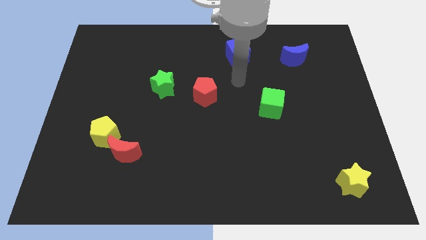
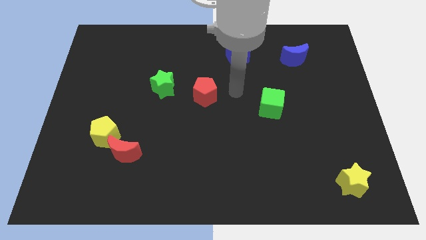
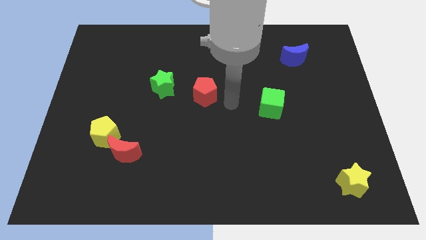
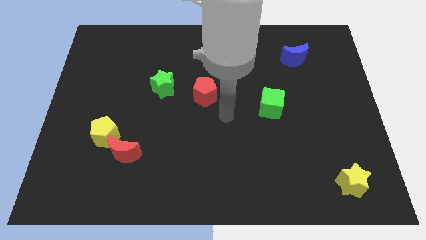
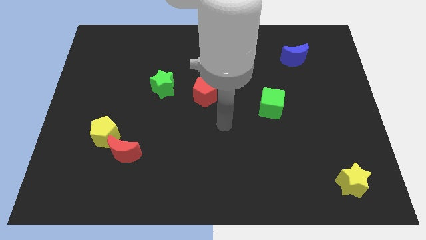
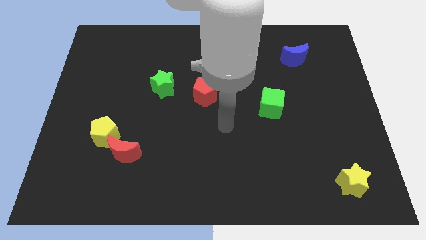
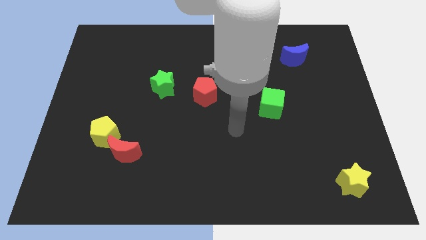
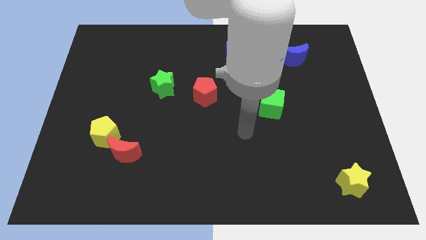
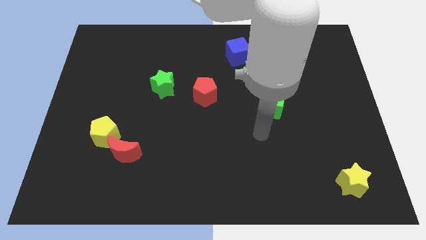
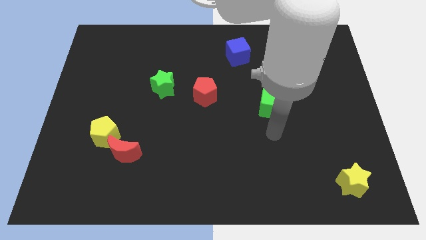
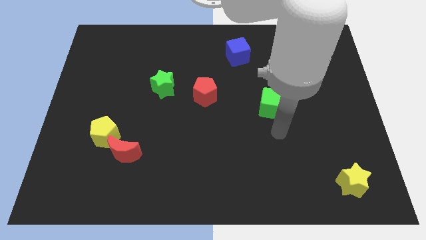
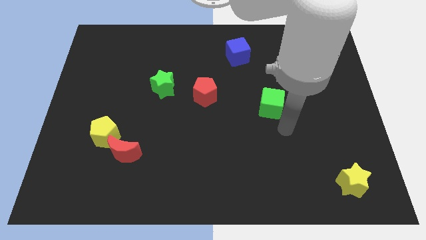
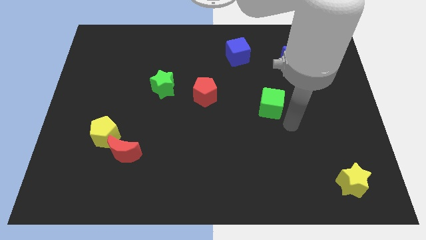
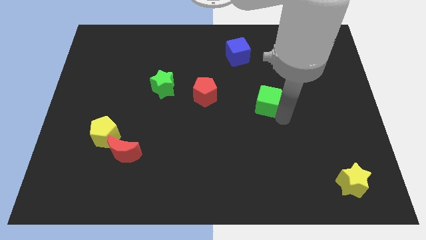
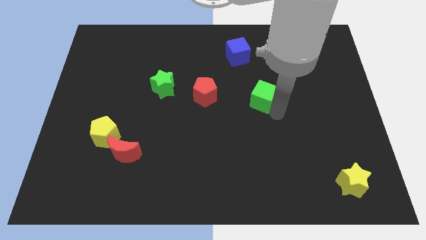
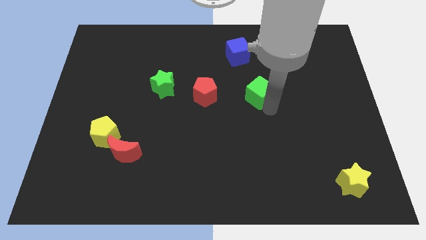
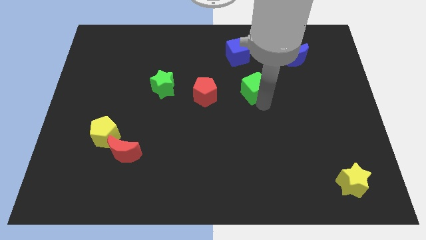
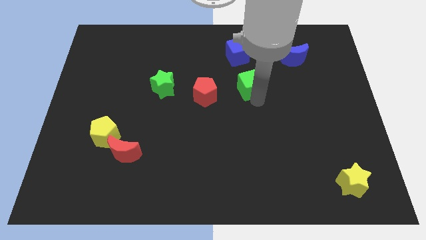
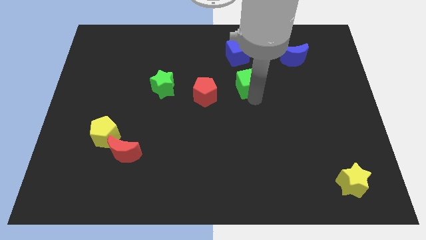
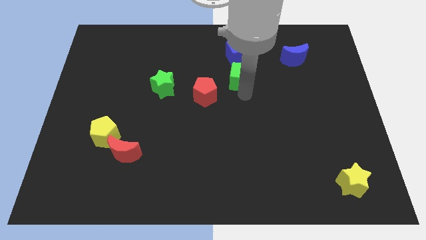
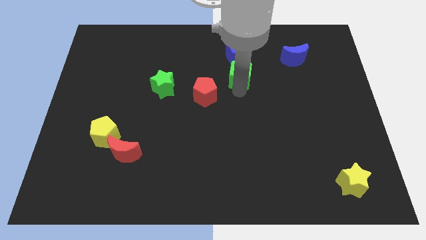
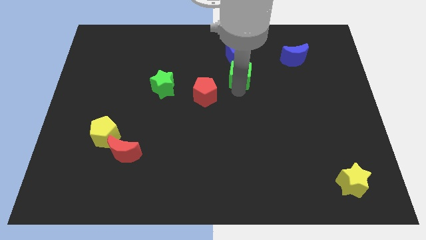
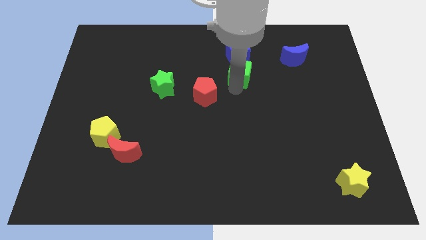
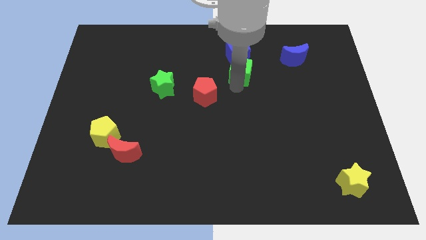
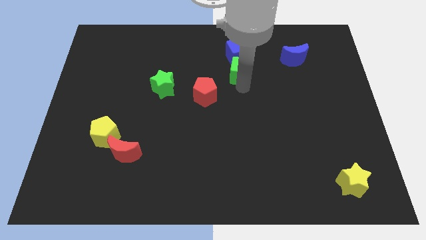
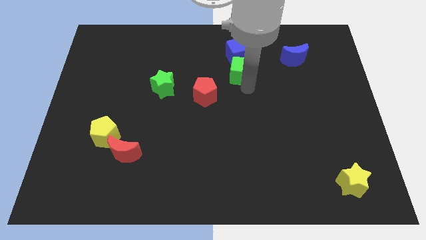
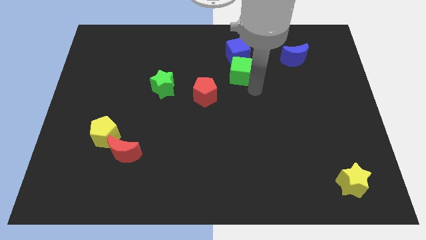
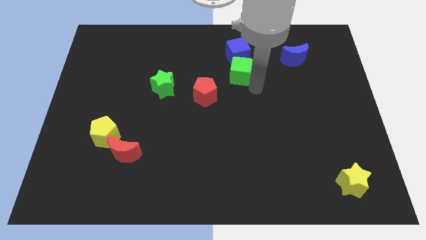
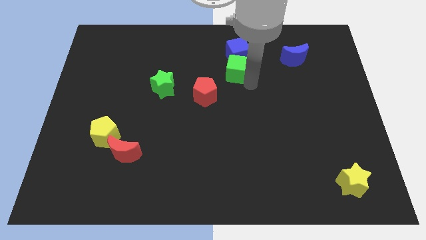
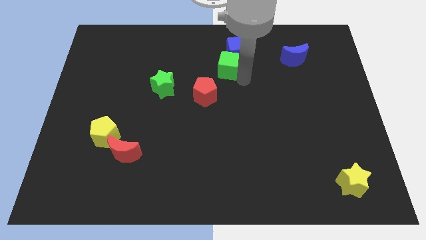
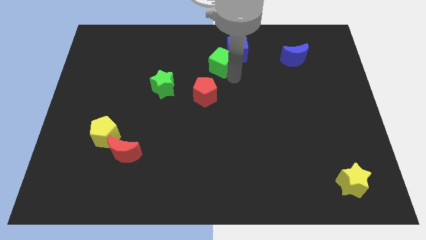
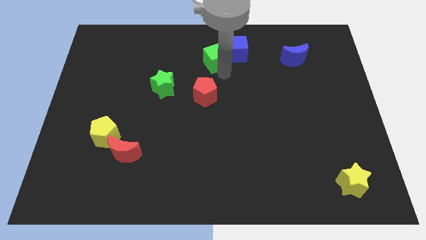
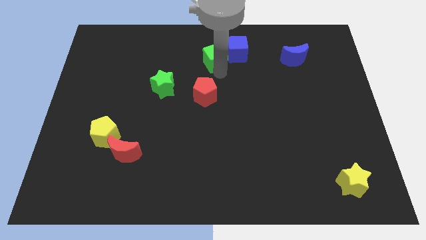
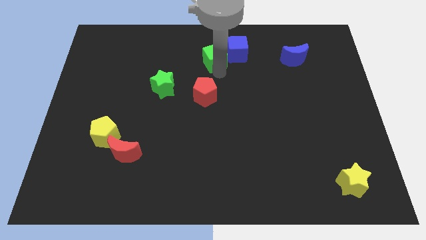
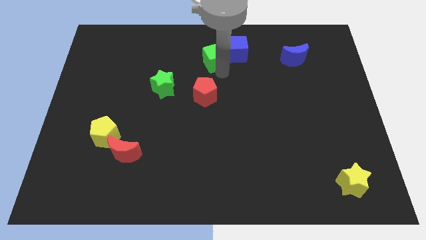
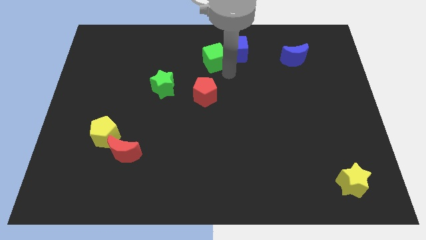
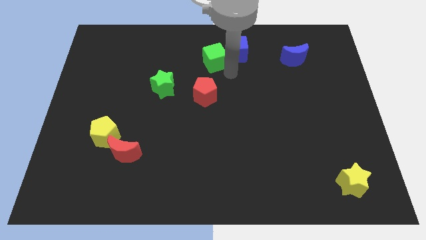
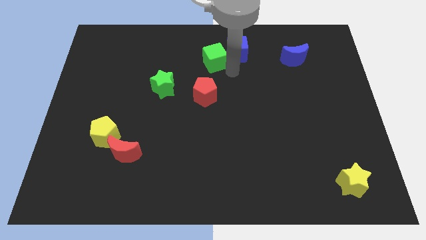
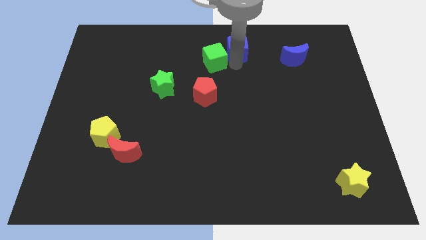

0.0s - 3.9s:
move the green cube close to the blue cube

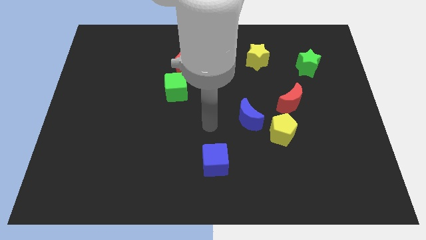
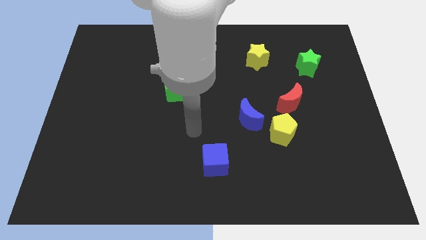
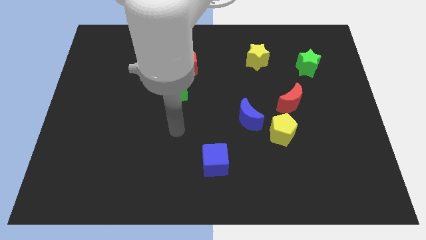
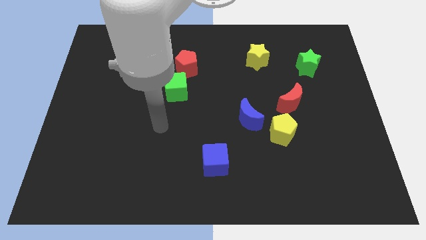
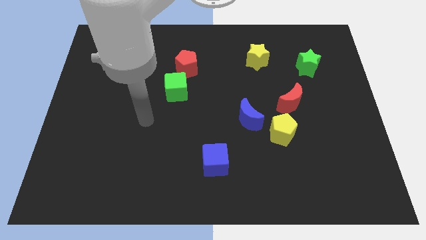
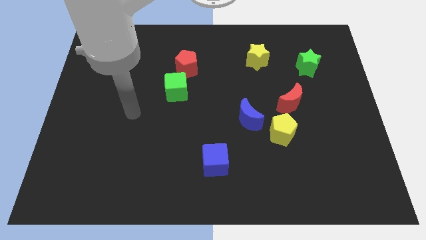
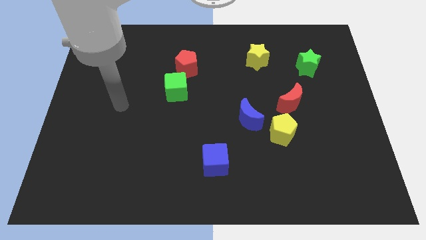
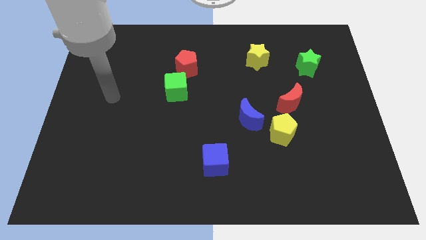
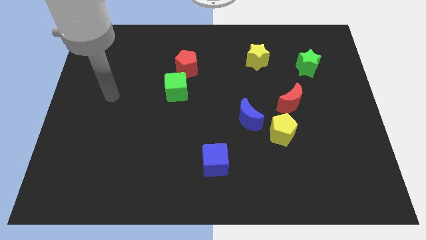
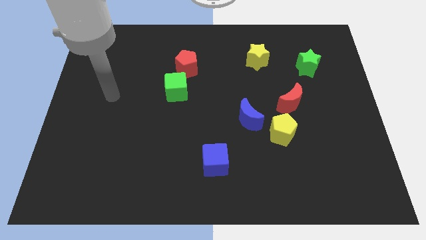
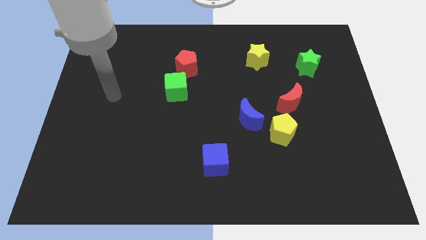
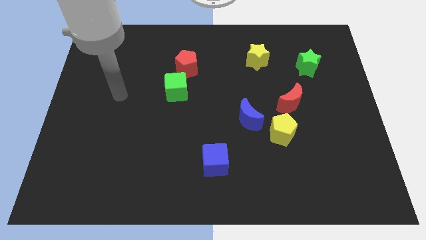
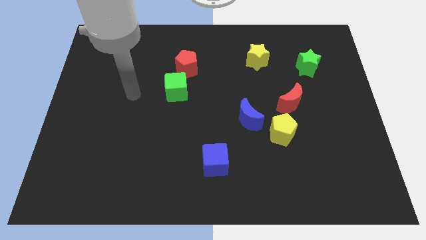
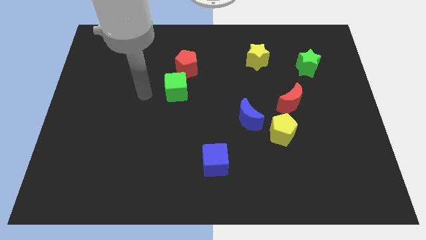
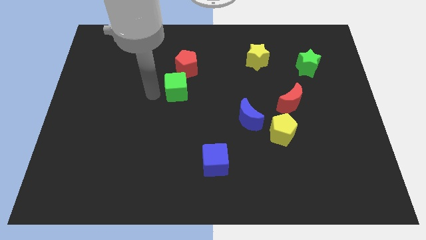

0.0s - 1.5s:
place the arm to the left of the green cube

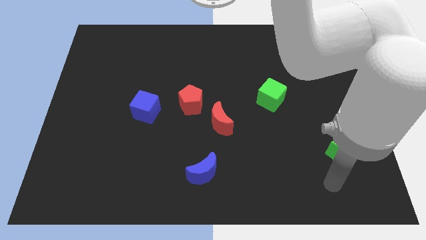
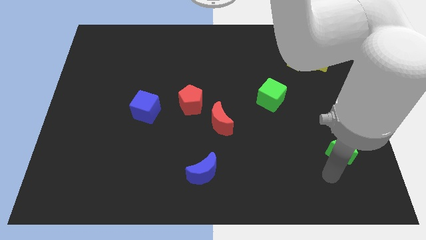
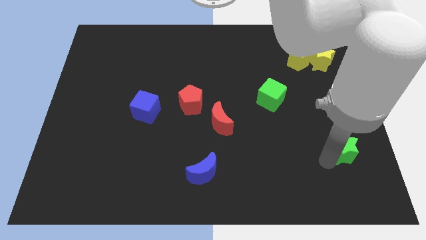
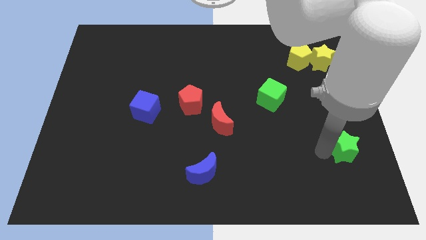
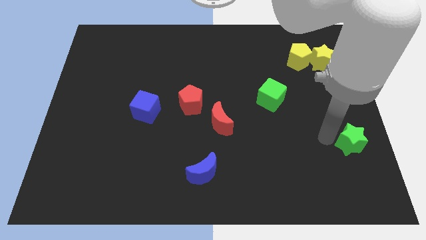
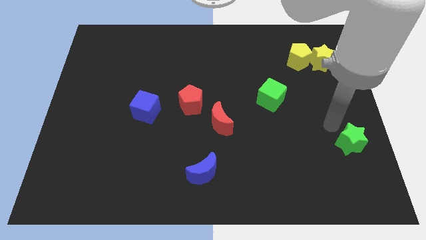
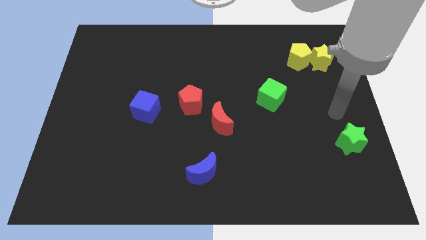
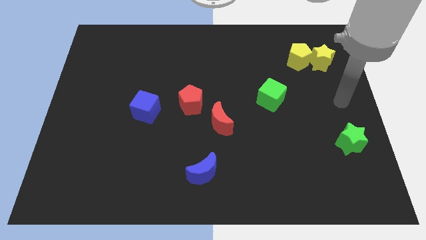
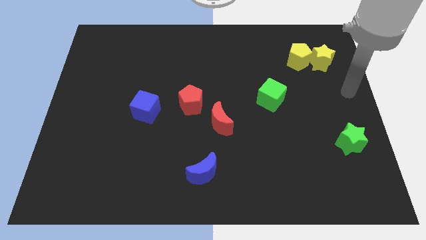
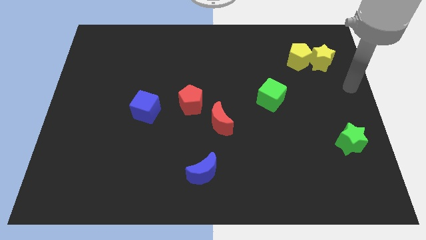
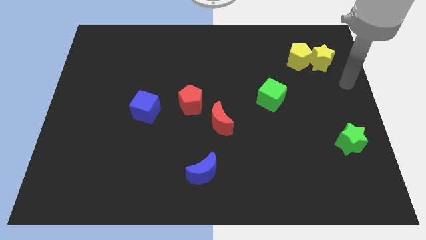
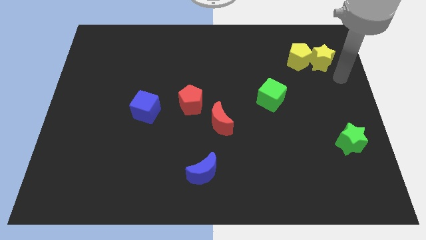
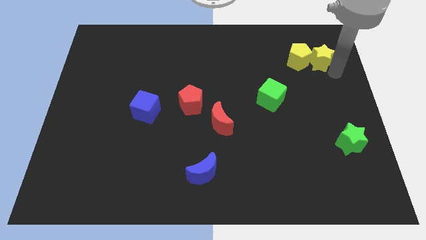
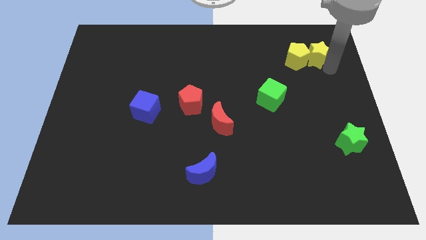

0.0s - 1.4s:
tap the yellow star

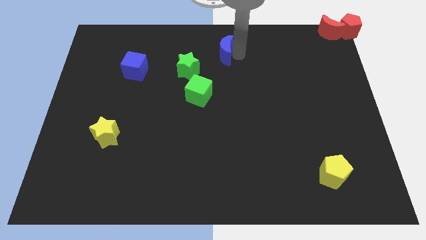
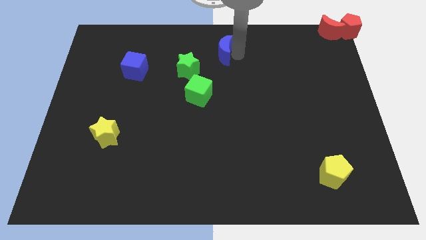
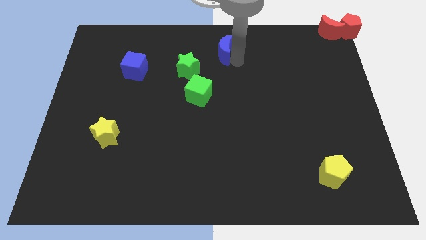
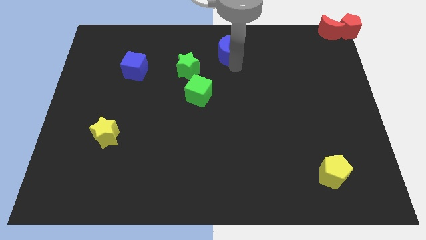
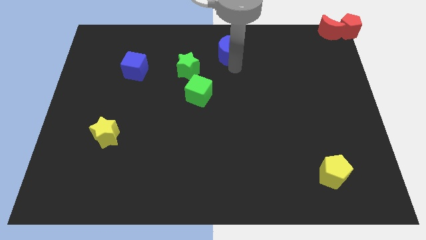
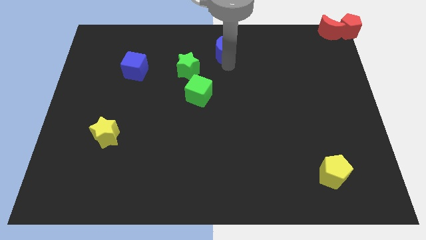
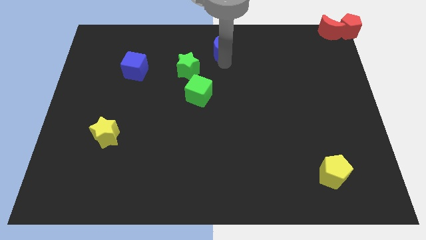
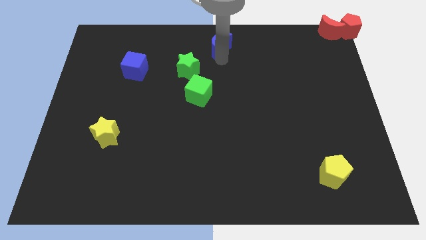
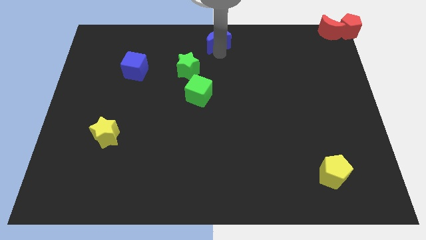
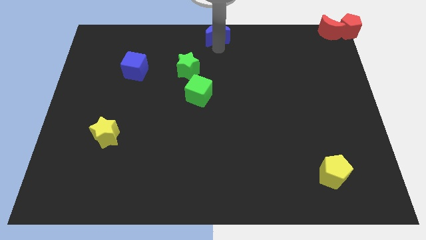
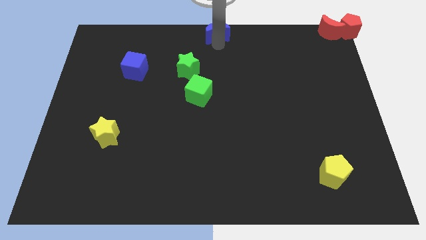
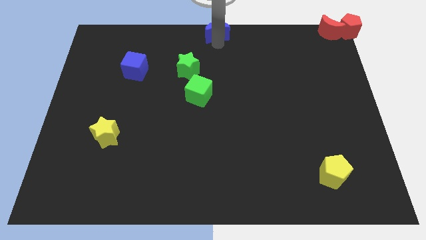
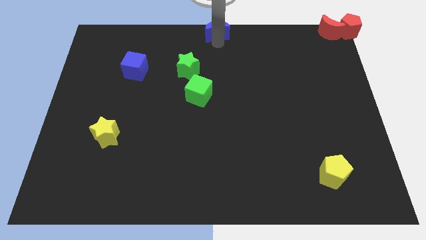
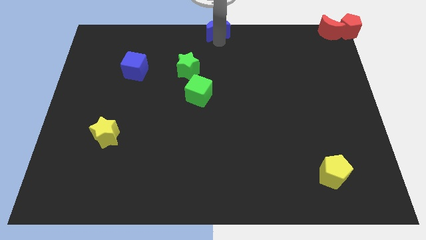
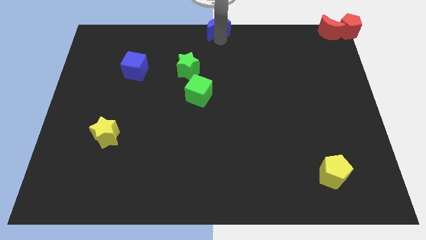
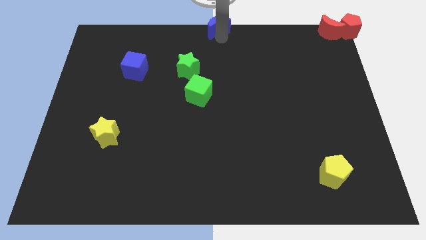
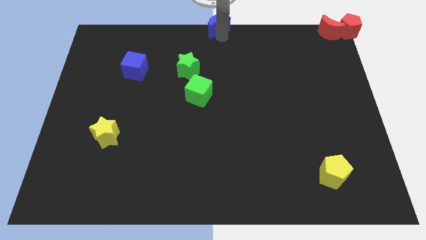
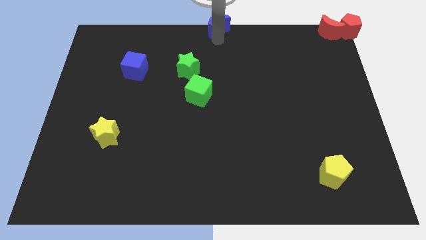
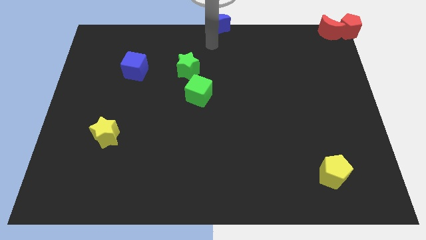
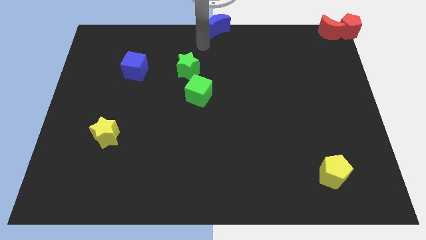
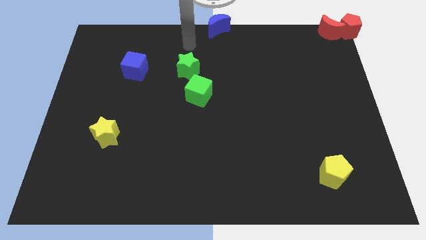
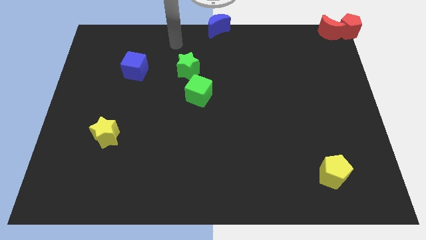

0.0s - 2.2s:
place the blue crescent at the top center of the board
